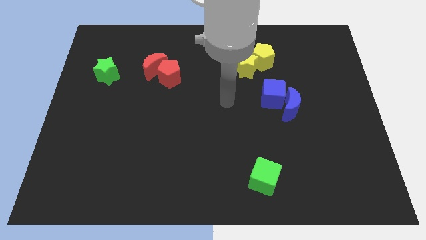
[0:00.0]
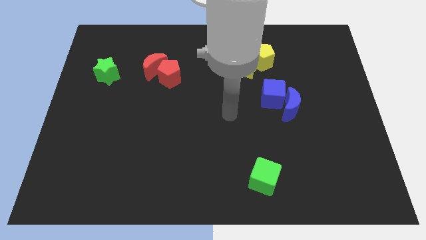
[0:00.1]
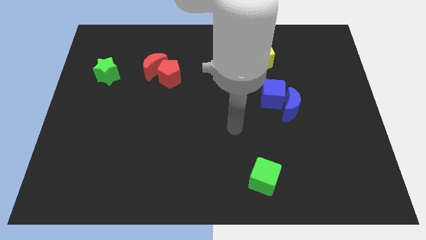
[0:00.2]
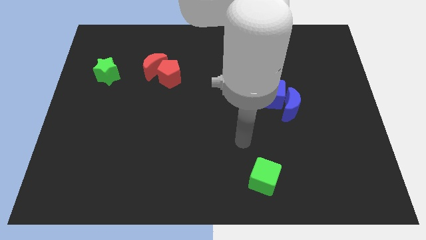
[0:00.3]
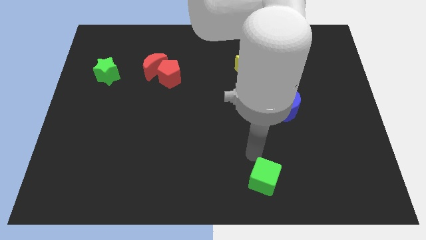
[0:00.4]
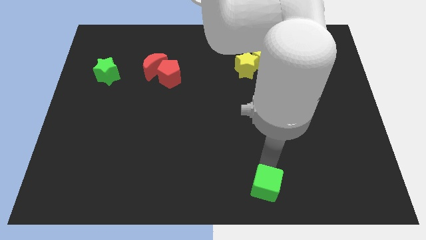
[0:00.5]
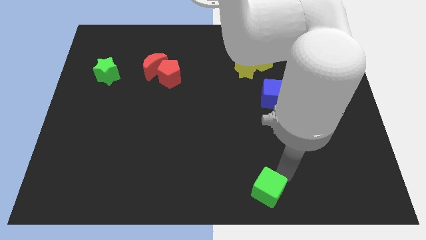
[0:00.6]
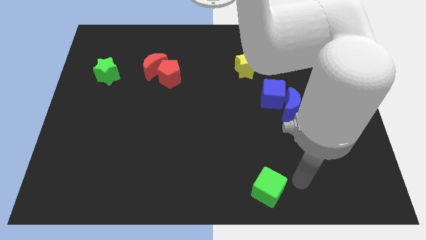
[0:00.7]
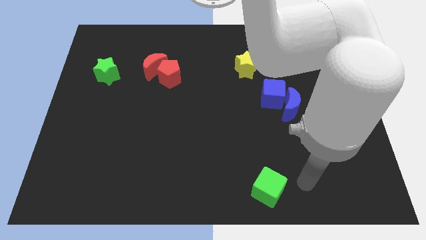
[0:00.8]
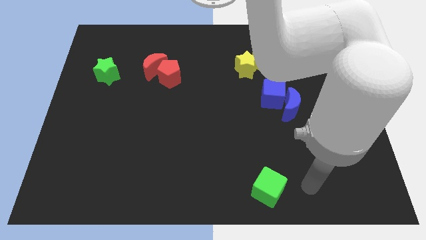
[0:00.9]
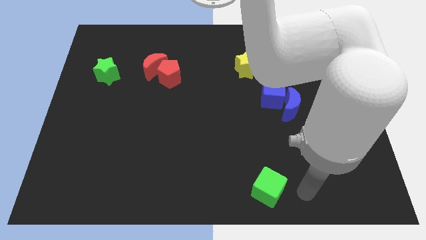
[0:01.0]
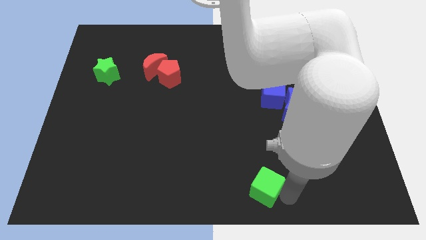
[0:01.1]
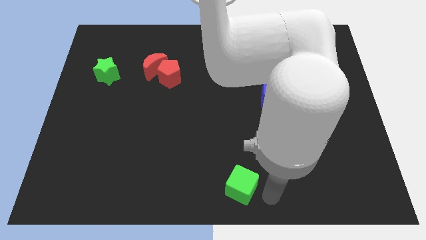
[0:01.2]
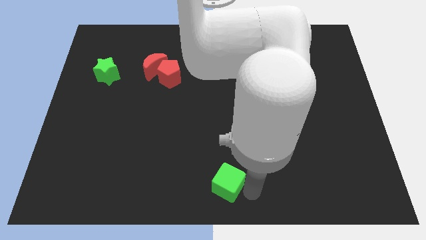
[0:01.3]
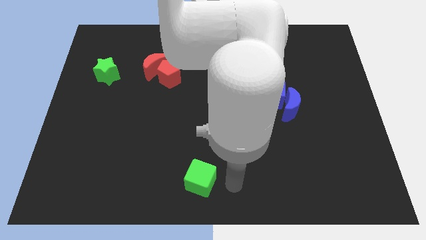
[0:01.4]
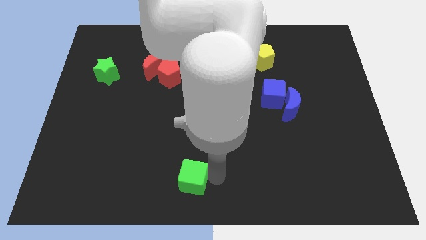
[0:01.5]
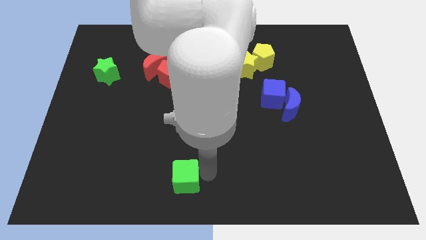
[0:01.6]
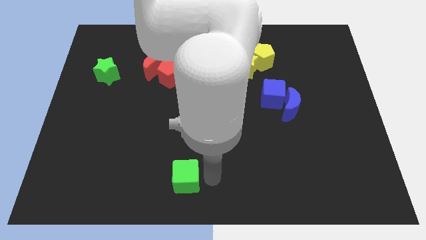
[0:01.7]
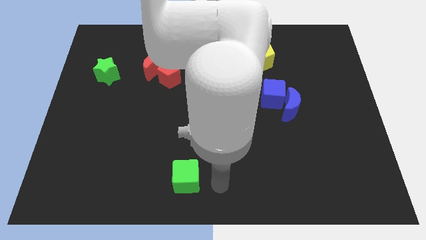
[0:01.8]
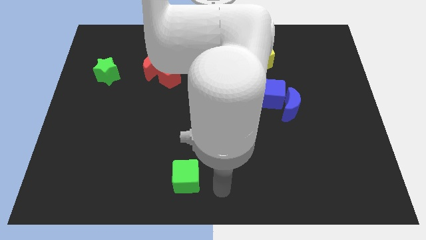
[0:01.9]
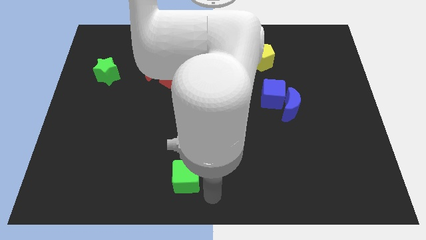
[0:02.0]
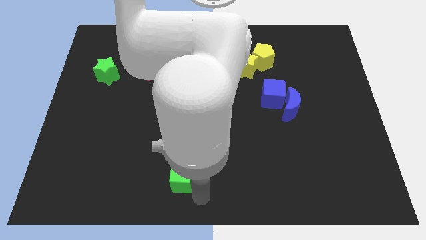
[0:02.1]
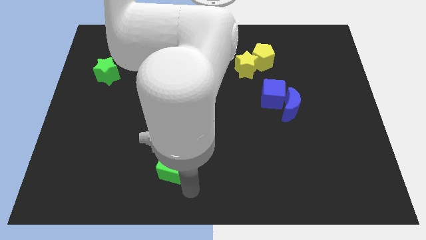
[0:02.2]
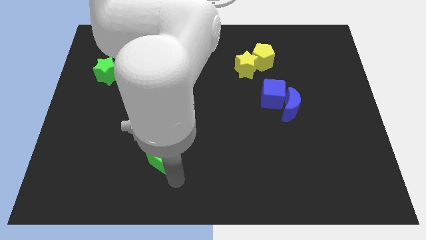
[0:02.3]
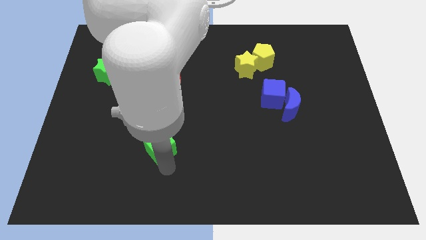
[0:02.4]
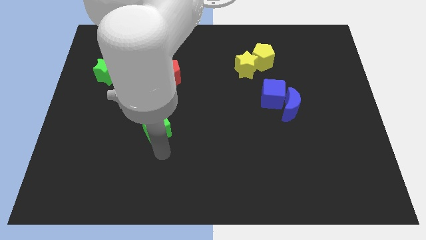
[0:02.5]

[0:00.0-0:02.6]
move the green cube down to the red pentagon

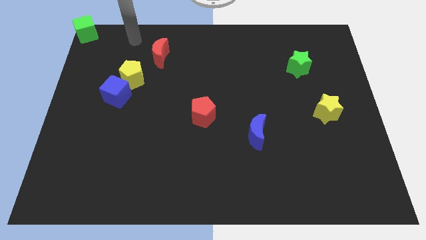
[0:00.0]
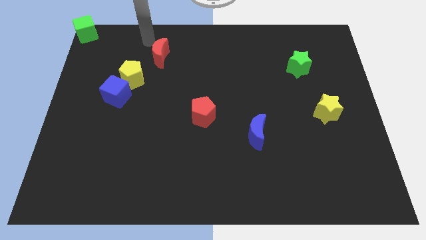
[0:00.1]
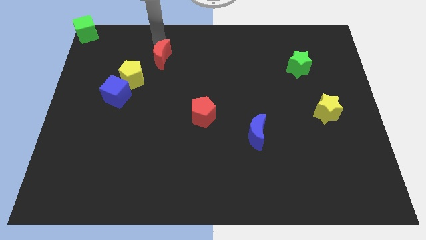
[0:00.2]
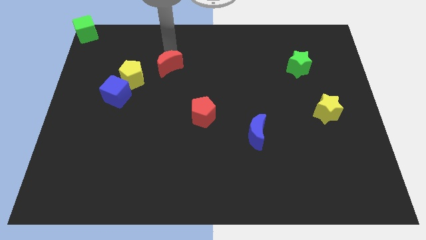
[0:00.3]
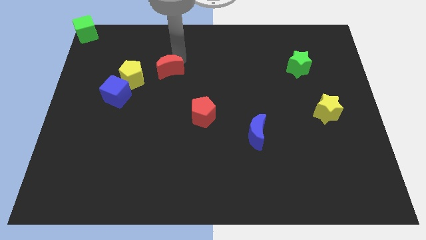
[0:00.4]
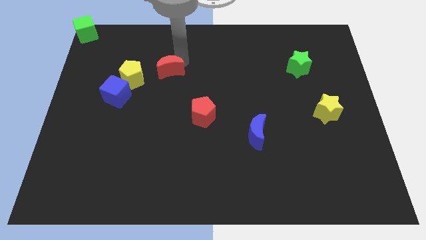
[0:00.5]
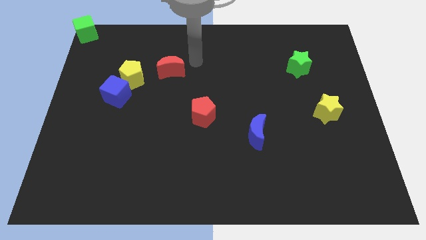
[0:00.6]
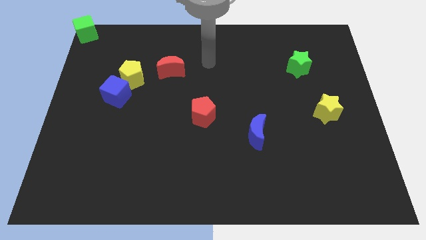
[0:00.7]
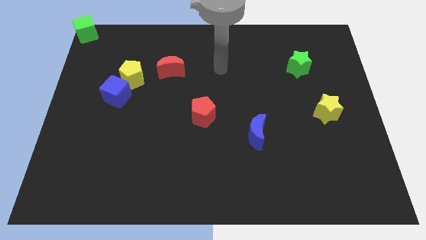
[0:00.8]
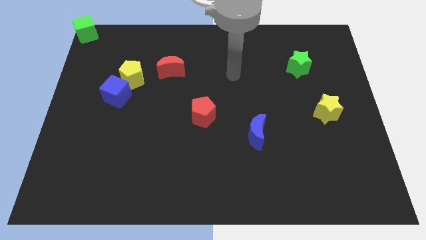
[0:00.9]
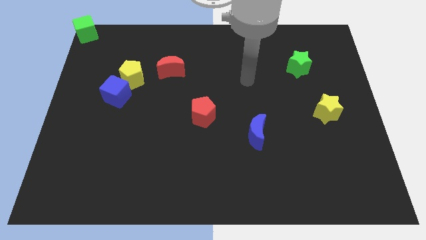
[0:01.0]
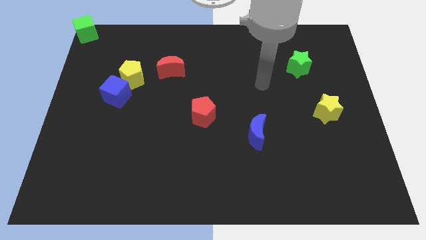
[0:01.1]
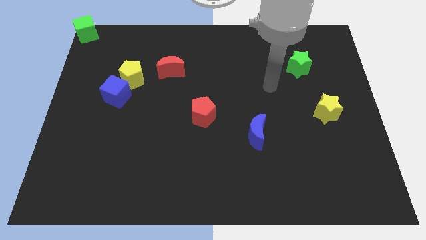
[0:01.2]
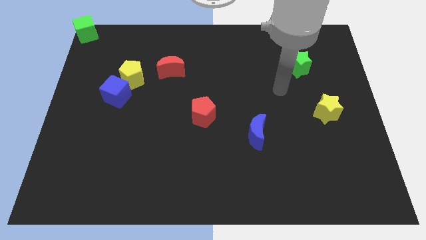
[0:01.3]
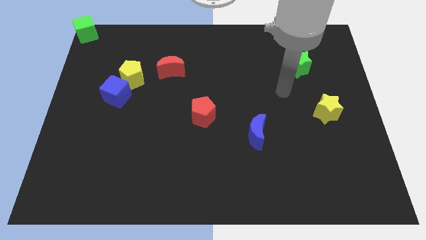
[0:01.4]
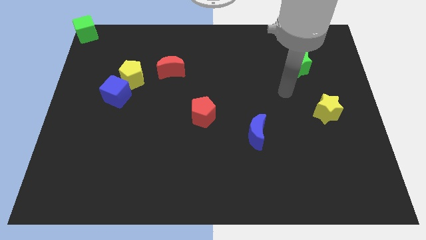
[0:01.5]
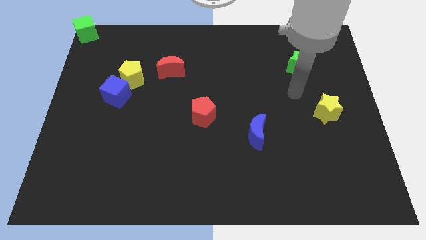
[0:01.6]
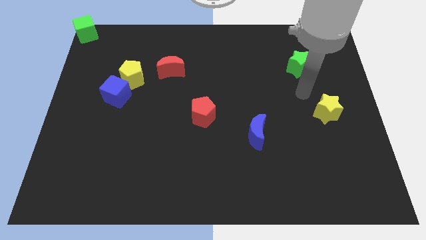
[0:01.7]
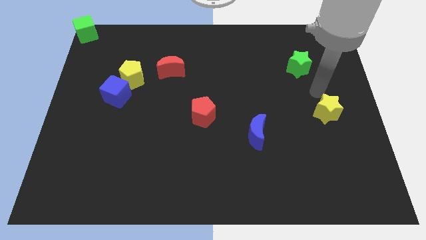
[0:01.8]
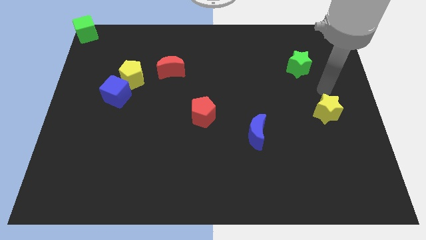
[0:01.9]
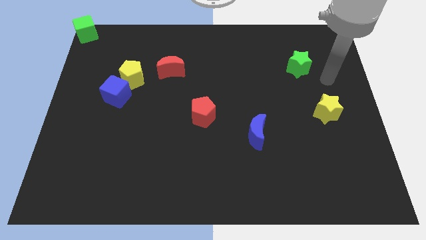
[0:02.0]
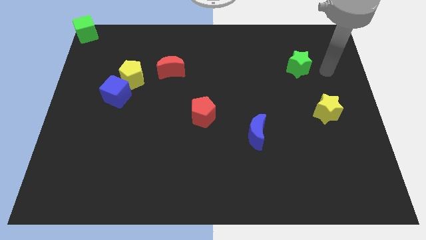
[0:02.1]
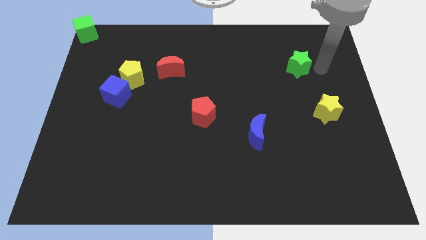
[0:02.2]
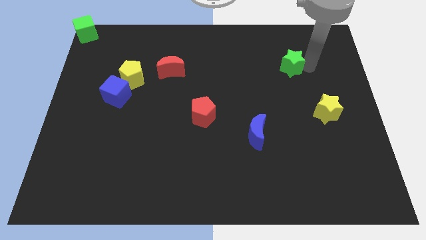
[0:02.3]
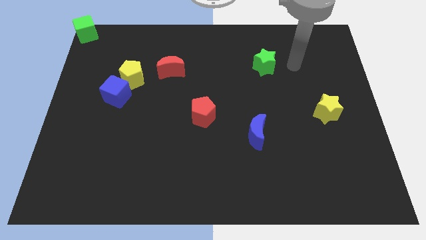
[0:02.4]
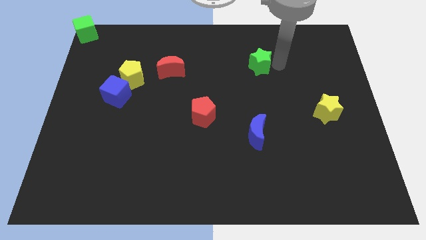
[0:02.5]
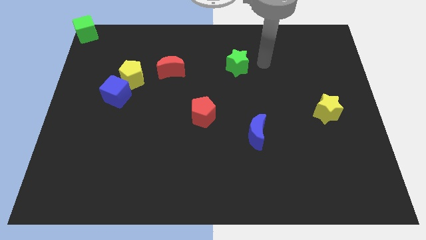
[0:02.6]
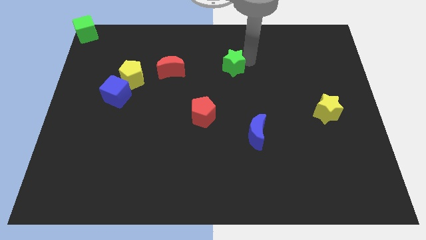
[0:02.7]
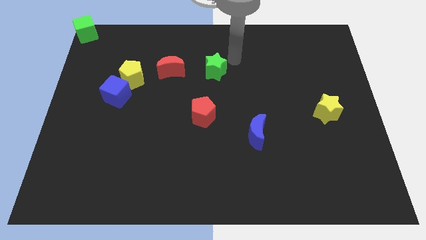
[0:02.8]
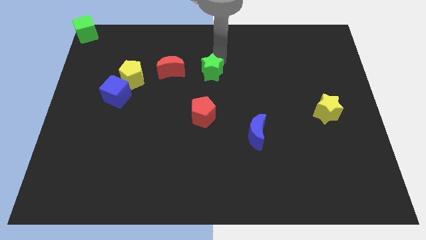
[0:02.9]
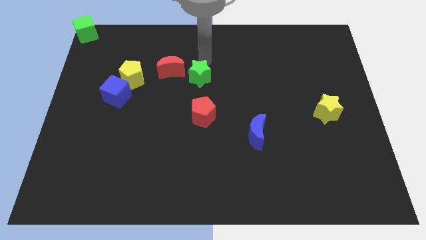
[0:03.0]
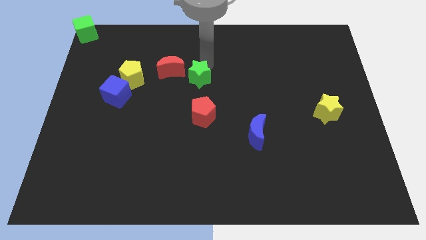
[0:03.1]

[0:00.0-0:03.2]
push the green star vertically to the top side of the red pentagon

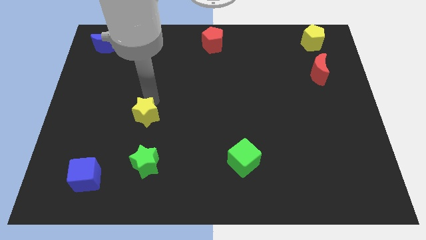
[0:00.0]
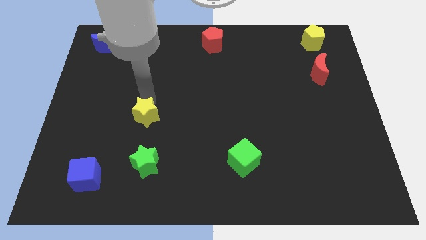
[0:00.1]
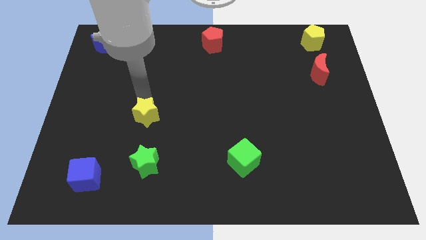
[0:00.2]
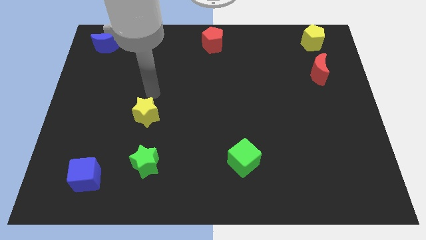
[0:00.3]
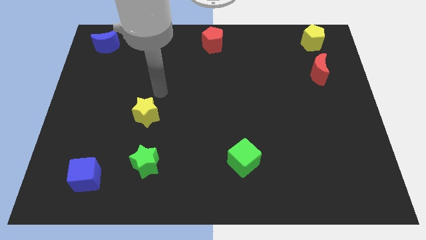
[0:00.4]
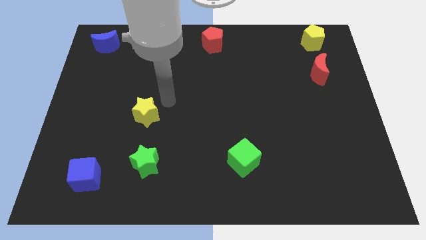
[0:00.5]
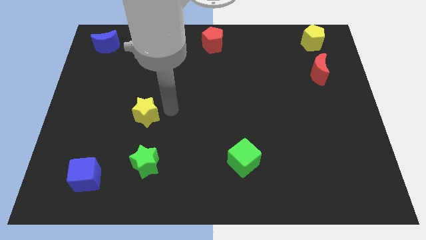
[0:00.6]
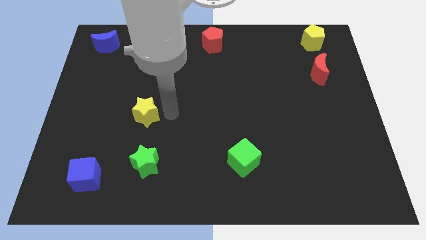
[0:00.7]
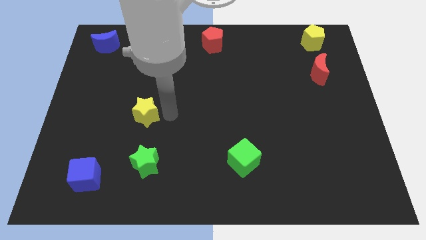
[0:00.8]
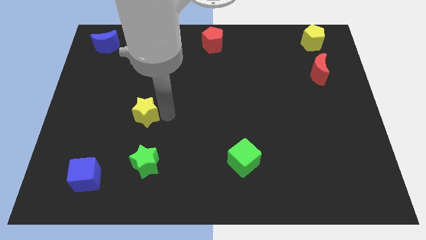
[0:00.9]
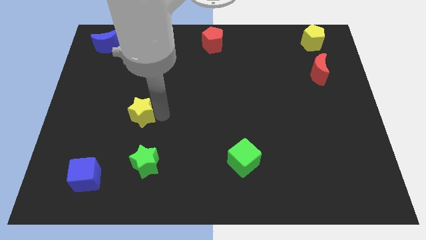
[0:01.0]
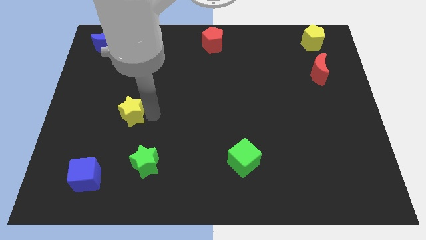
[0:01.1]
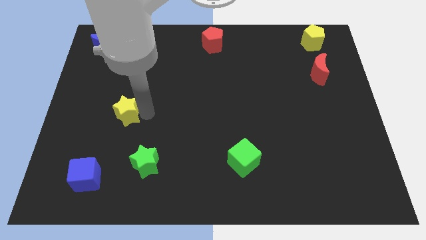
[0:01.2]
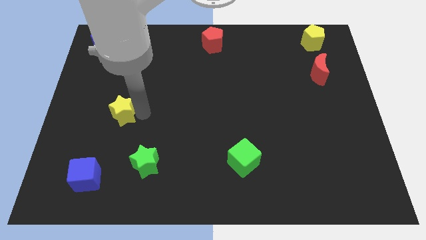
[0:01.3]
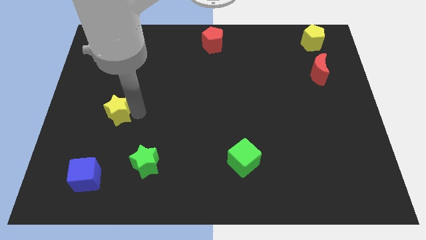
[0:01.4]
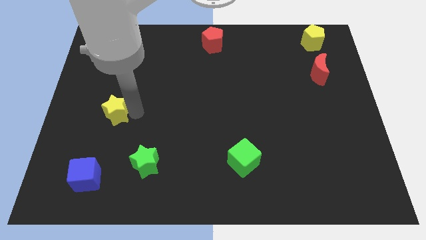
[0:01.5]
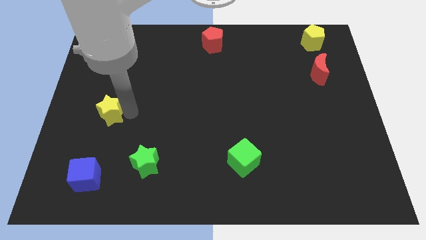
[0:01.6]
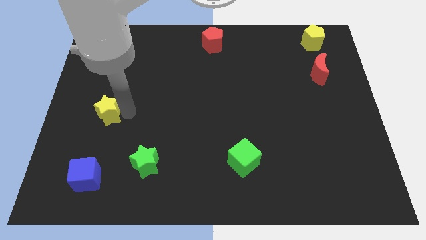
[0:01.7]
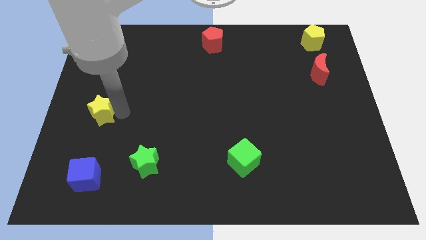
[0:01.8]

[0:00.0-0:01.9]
push the yellow star to the right of the board

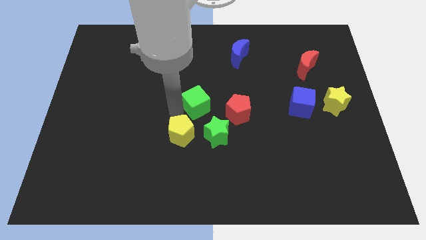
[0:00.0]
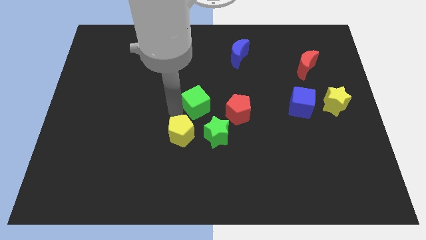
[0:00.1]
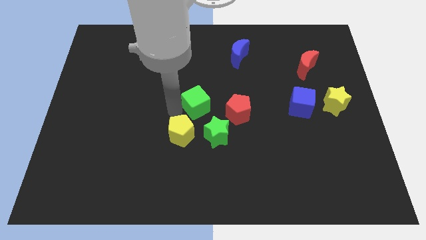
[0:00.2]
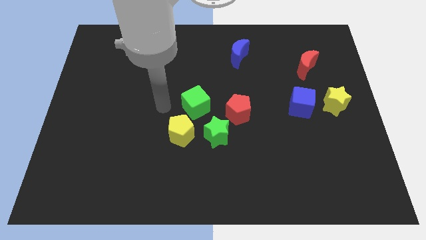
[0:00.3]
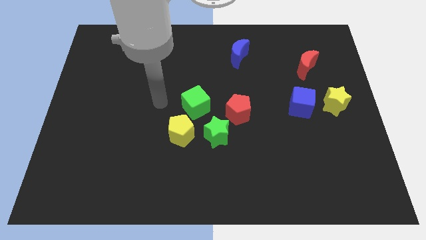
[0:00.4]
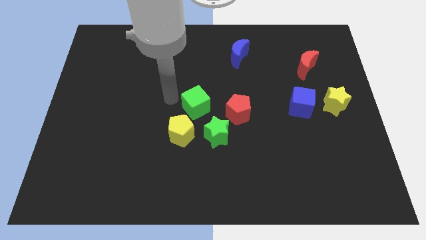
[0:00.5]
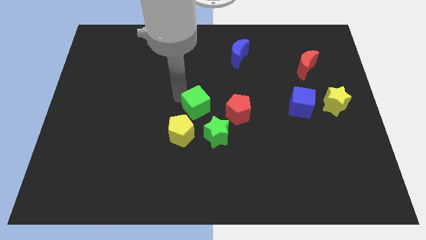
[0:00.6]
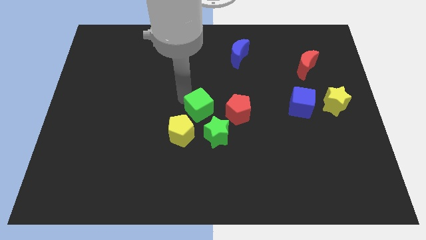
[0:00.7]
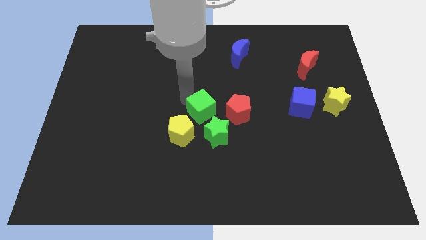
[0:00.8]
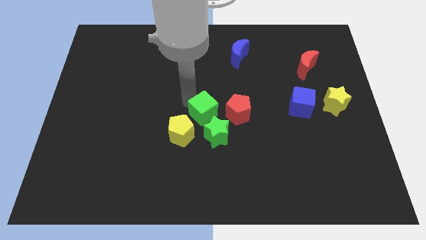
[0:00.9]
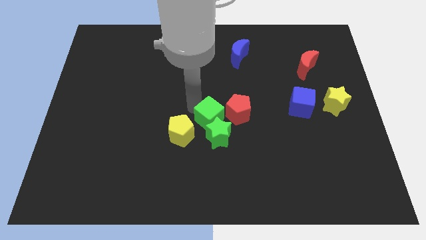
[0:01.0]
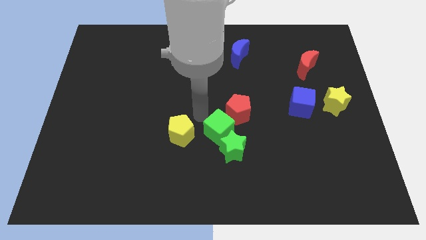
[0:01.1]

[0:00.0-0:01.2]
push the green cube into green star
